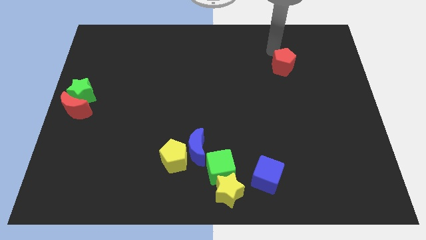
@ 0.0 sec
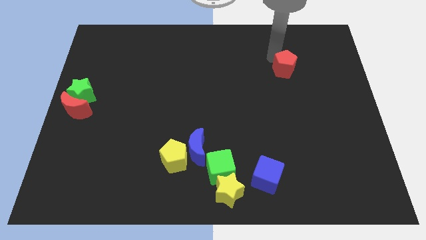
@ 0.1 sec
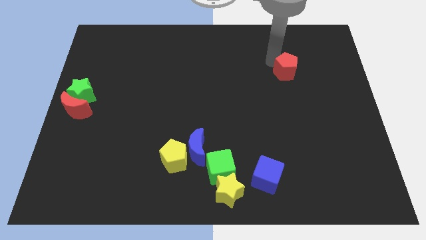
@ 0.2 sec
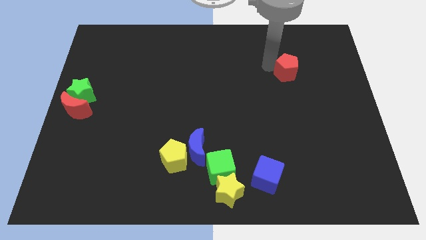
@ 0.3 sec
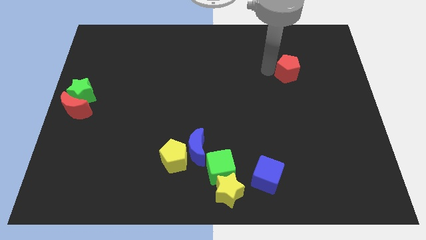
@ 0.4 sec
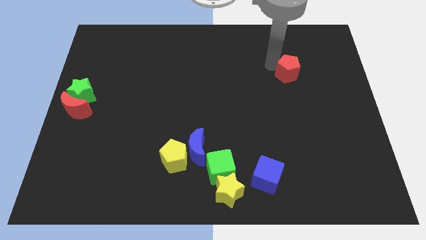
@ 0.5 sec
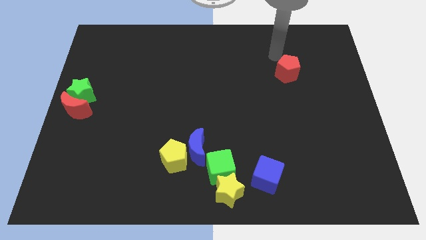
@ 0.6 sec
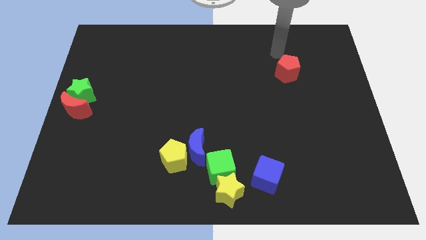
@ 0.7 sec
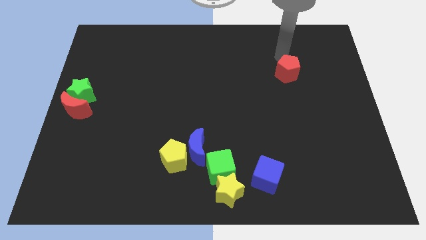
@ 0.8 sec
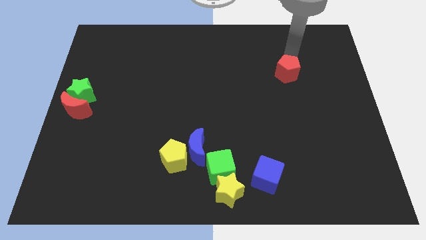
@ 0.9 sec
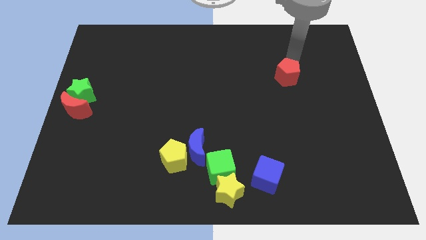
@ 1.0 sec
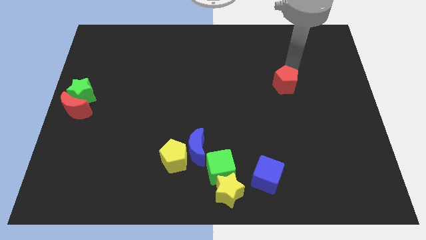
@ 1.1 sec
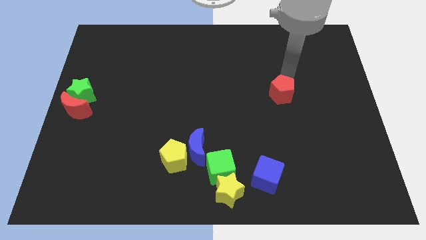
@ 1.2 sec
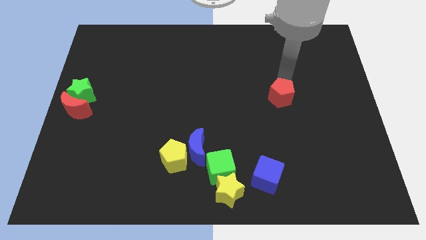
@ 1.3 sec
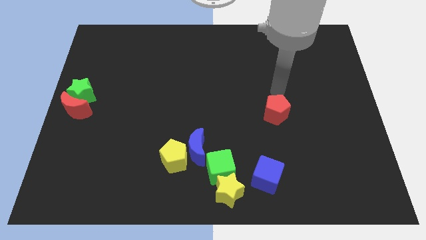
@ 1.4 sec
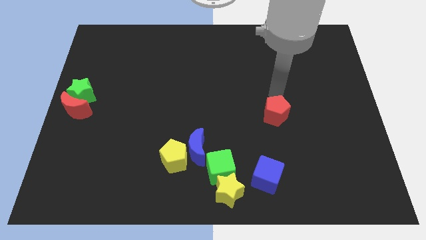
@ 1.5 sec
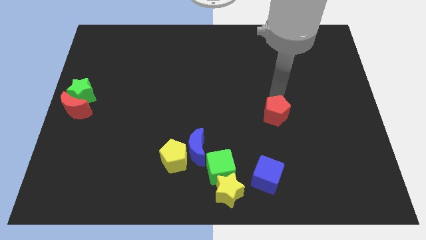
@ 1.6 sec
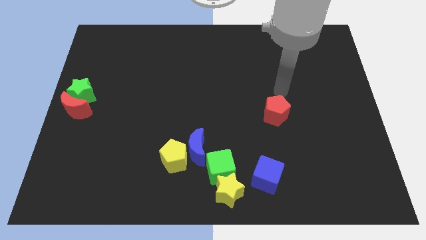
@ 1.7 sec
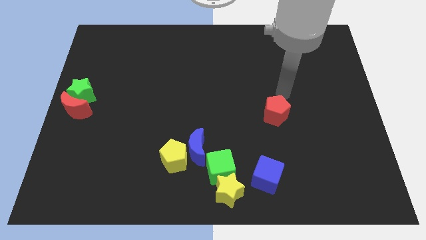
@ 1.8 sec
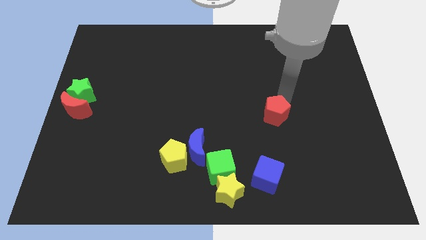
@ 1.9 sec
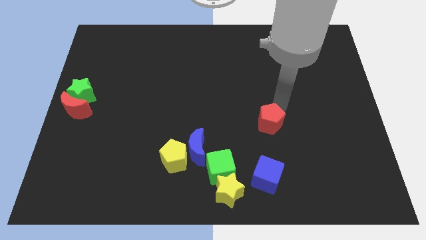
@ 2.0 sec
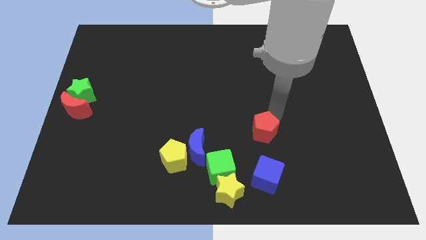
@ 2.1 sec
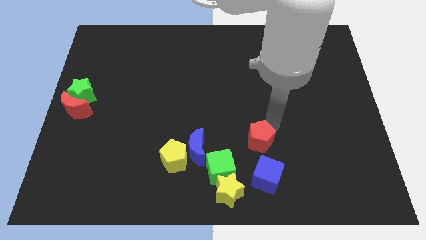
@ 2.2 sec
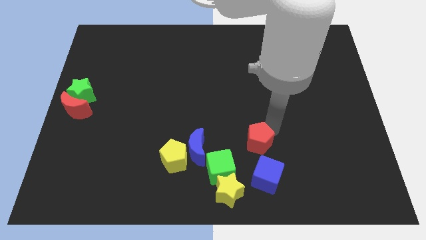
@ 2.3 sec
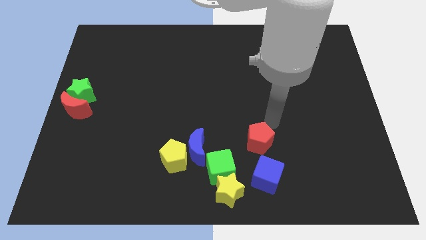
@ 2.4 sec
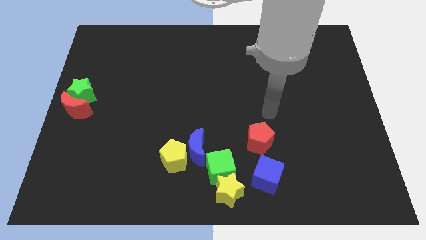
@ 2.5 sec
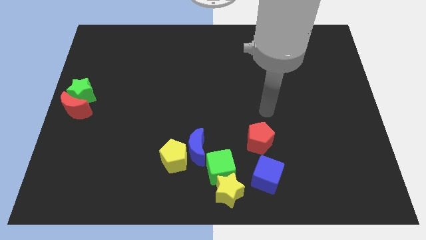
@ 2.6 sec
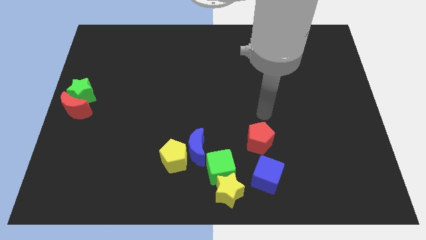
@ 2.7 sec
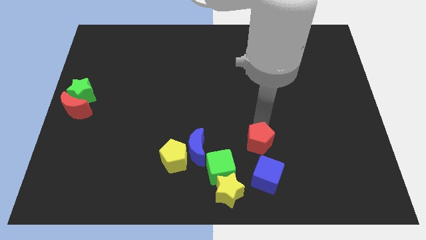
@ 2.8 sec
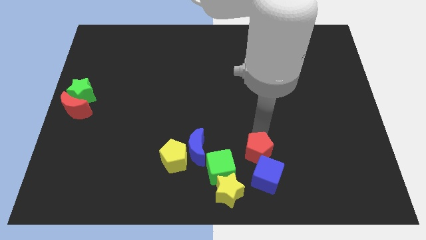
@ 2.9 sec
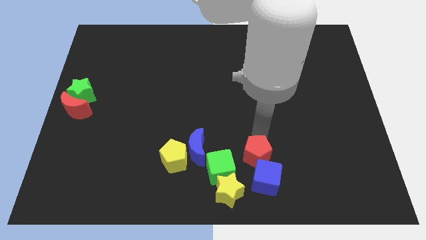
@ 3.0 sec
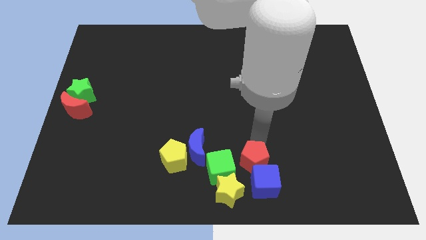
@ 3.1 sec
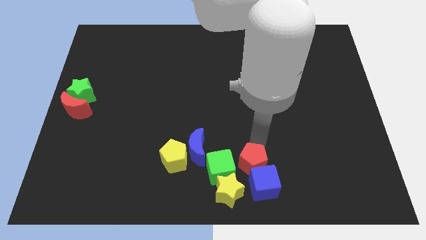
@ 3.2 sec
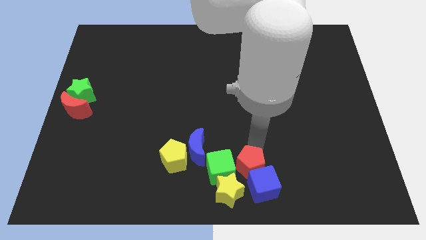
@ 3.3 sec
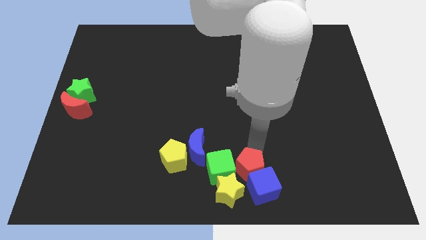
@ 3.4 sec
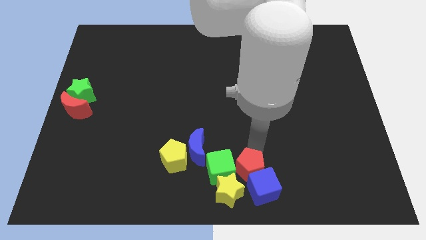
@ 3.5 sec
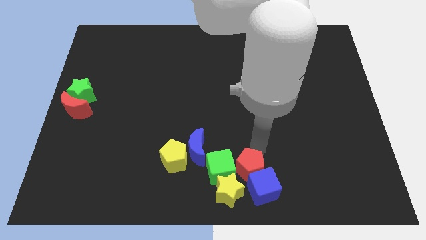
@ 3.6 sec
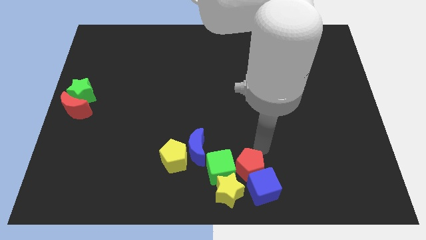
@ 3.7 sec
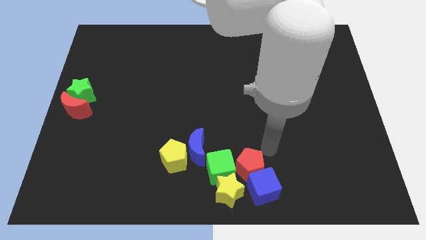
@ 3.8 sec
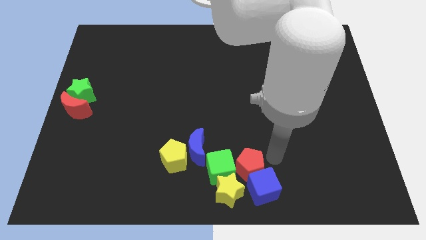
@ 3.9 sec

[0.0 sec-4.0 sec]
move the red pentagon to the right of the green cube

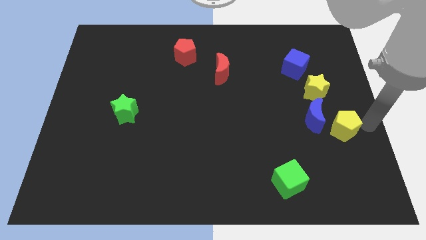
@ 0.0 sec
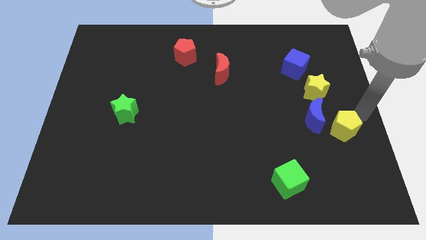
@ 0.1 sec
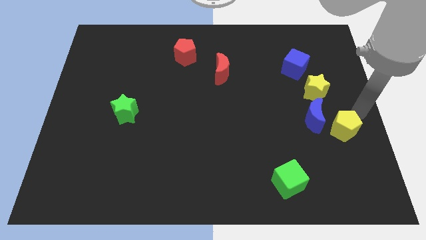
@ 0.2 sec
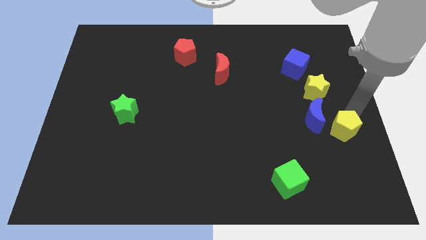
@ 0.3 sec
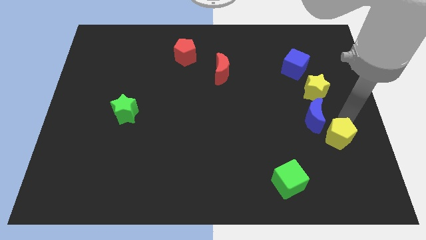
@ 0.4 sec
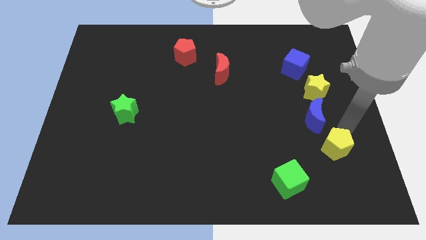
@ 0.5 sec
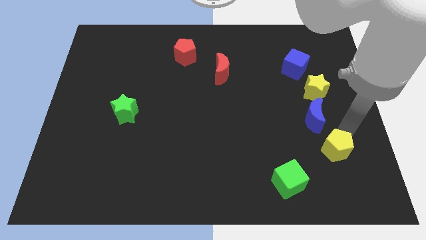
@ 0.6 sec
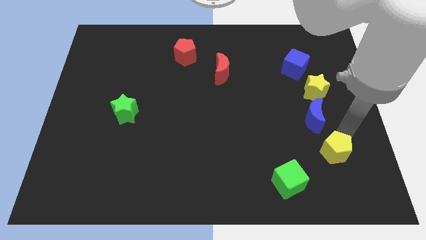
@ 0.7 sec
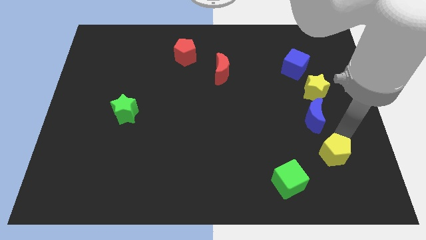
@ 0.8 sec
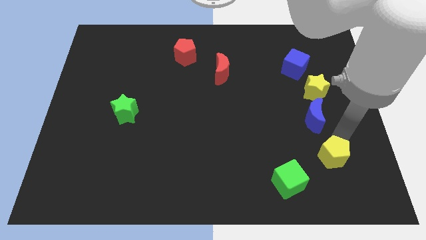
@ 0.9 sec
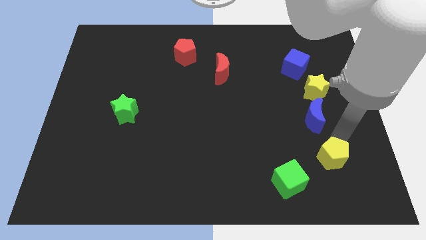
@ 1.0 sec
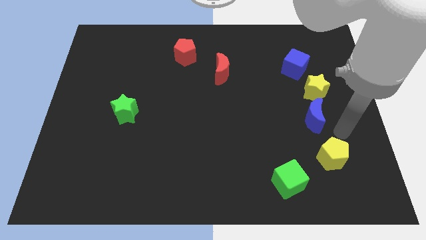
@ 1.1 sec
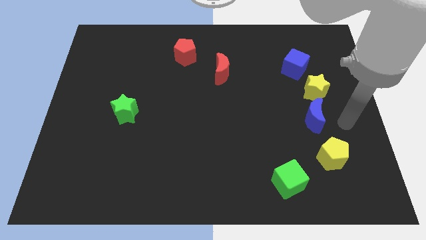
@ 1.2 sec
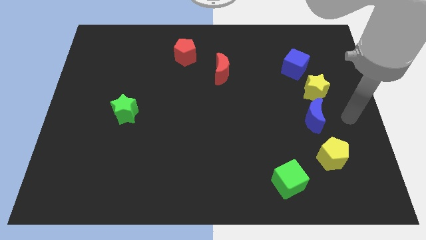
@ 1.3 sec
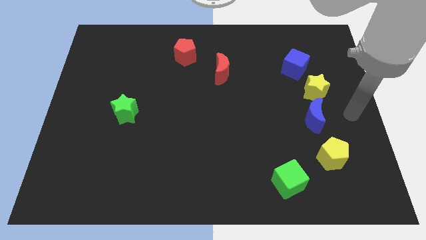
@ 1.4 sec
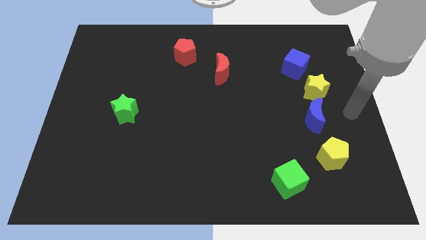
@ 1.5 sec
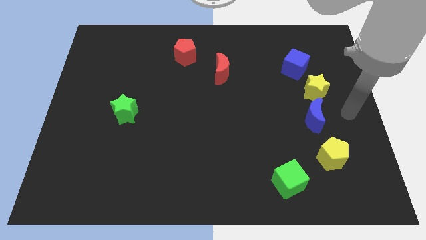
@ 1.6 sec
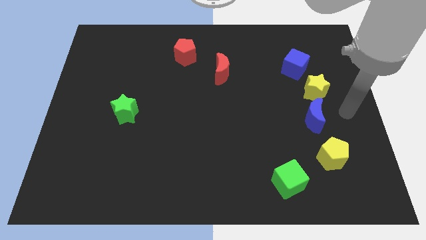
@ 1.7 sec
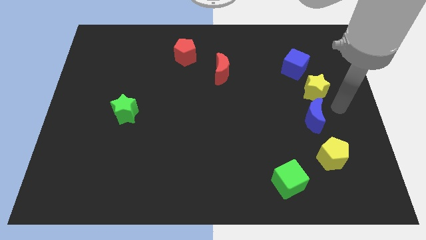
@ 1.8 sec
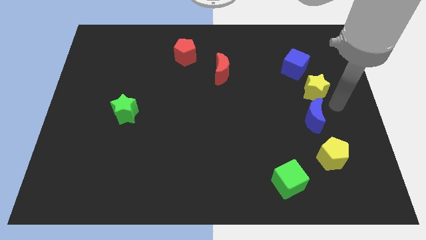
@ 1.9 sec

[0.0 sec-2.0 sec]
push yellow pentagon near green cube

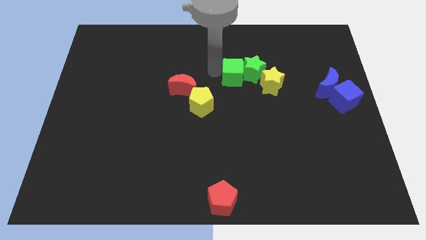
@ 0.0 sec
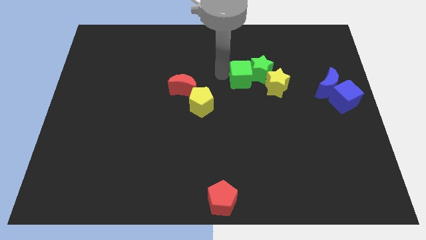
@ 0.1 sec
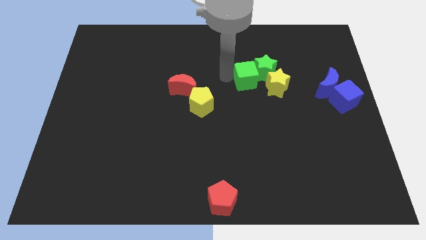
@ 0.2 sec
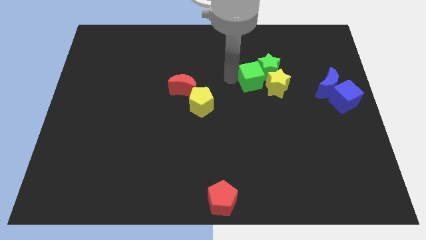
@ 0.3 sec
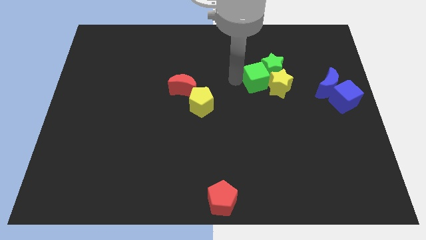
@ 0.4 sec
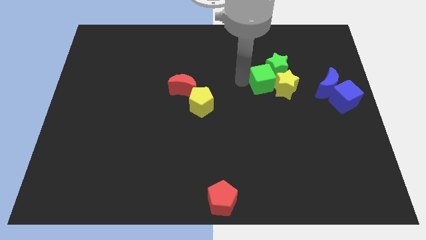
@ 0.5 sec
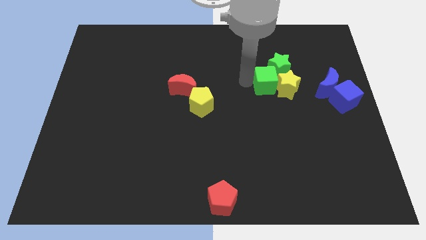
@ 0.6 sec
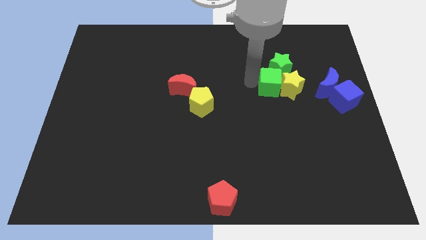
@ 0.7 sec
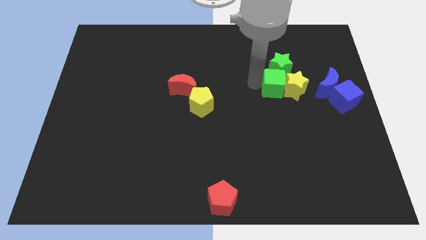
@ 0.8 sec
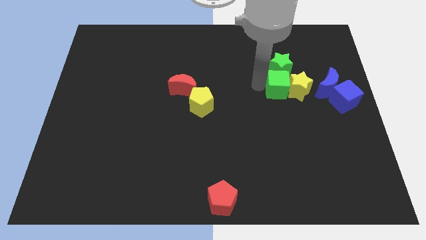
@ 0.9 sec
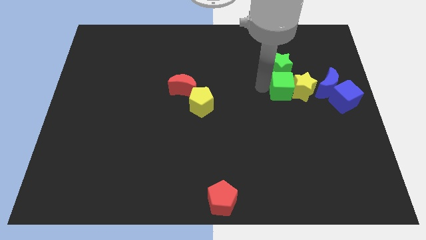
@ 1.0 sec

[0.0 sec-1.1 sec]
push the green cube at the bottom of the green star

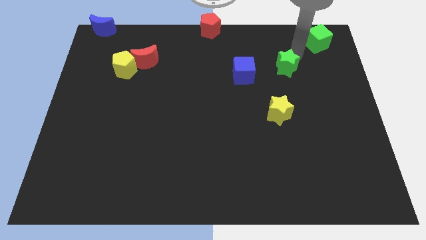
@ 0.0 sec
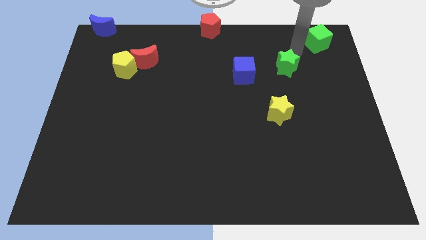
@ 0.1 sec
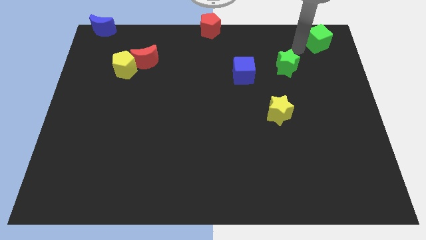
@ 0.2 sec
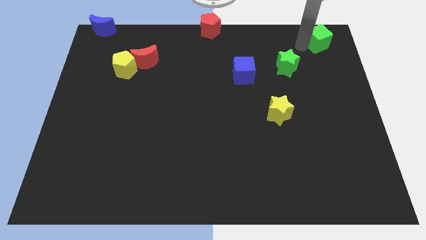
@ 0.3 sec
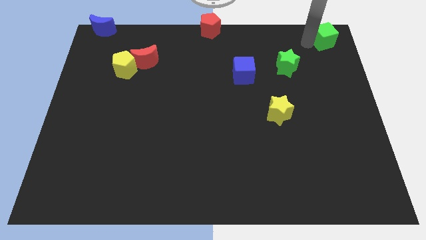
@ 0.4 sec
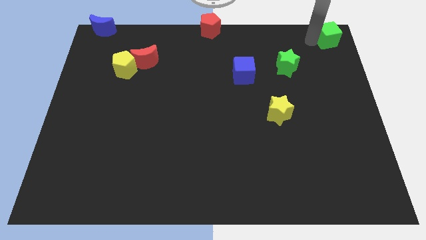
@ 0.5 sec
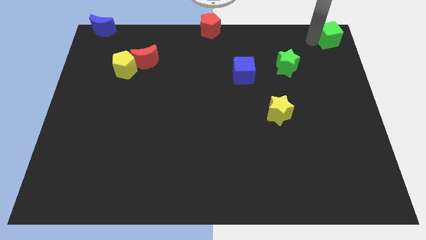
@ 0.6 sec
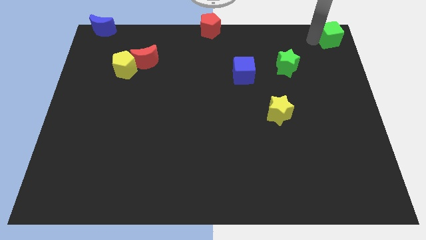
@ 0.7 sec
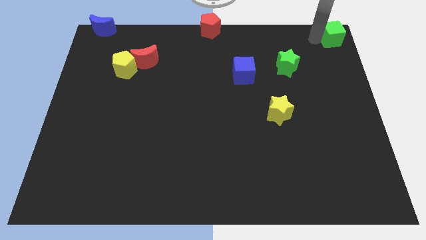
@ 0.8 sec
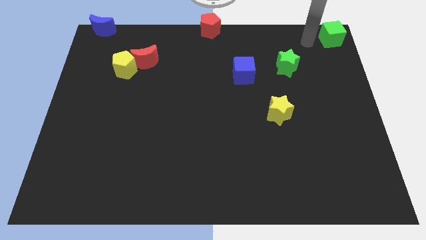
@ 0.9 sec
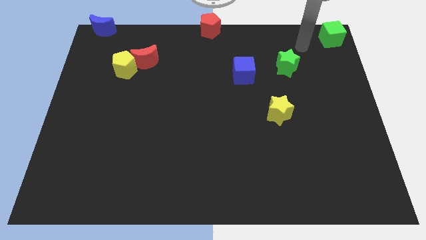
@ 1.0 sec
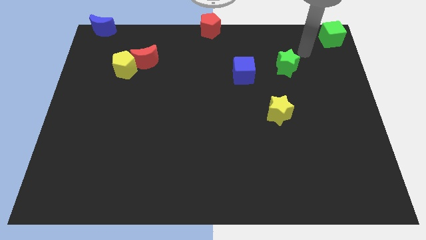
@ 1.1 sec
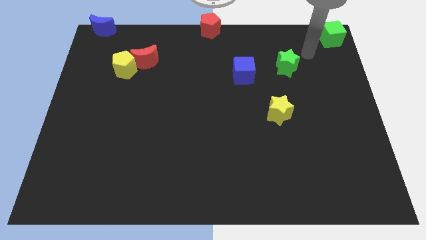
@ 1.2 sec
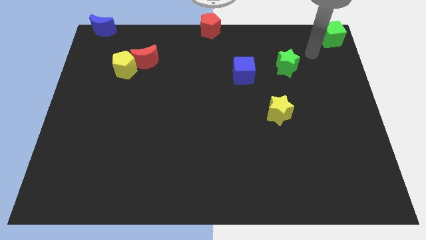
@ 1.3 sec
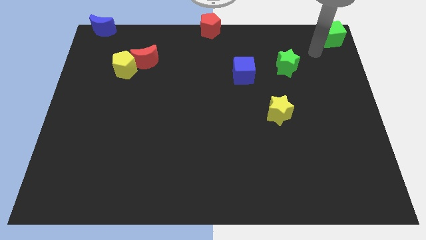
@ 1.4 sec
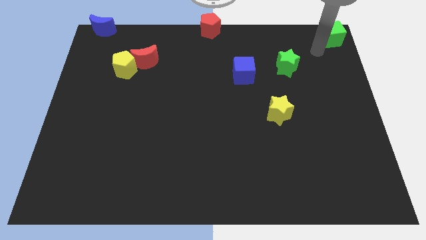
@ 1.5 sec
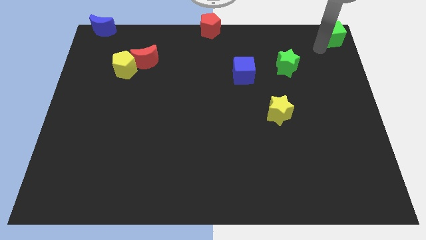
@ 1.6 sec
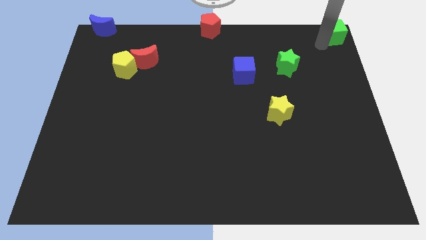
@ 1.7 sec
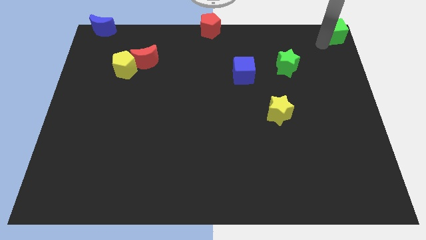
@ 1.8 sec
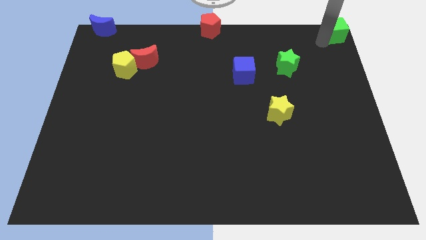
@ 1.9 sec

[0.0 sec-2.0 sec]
move the green cube to the top right corner of the board
